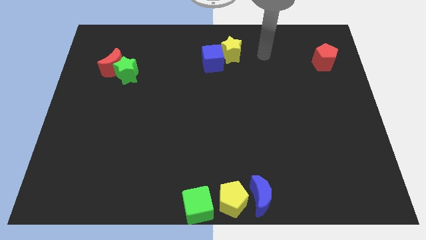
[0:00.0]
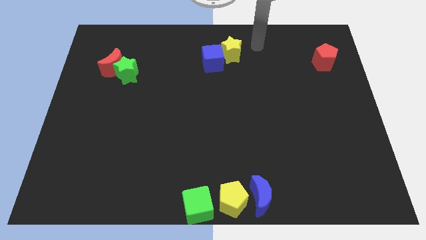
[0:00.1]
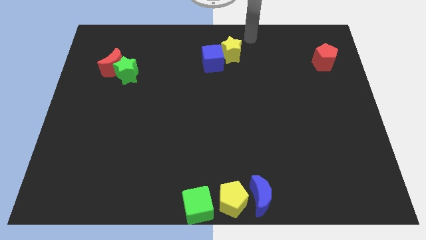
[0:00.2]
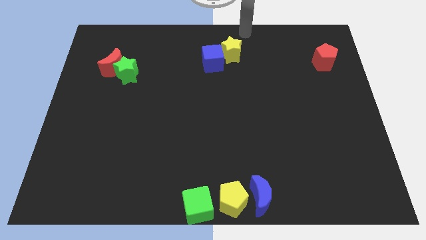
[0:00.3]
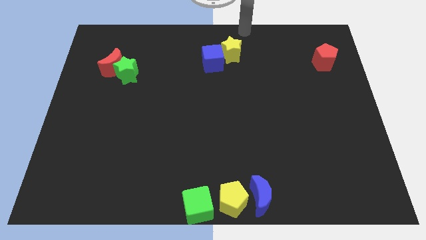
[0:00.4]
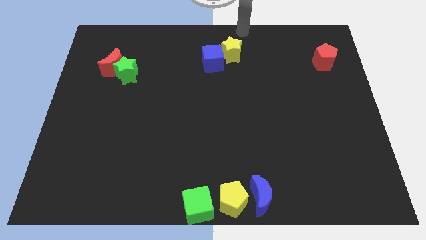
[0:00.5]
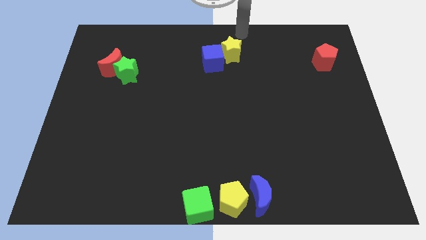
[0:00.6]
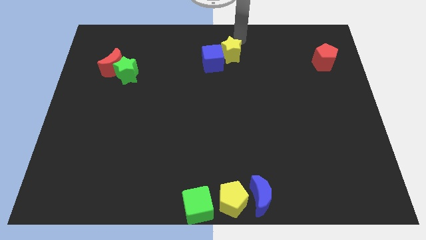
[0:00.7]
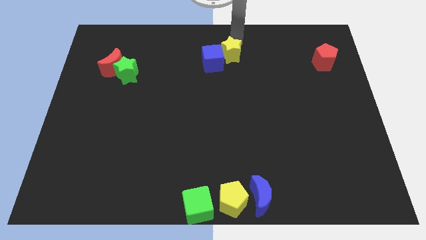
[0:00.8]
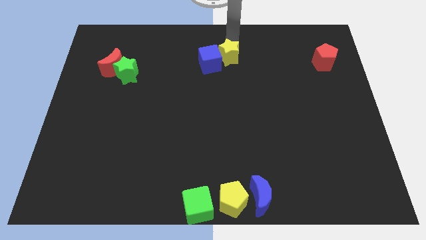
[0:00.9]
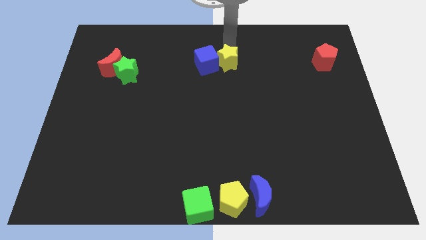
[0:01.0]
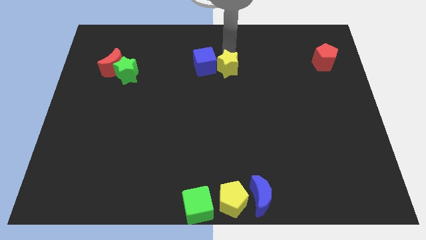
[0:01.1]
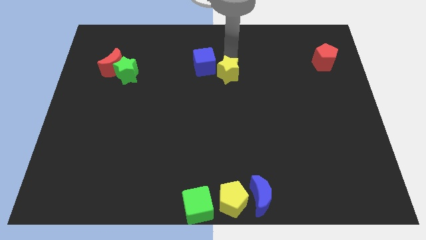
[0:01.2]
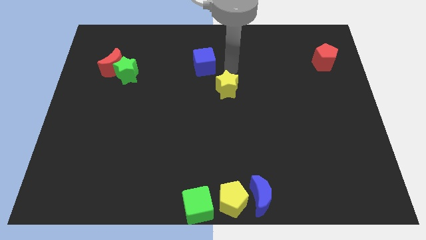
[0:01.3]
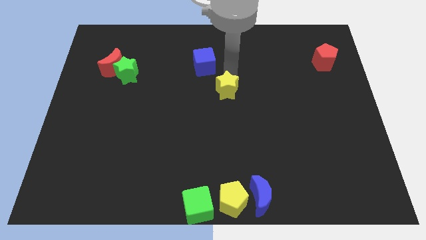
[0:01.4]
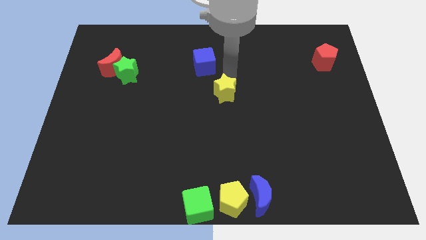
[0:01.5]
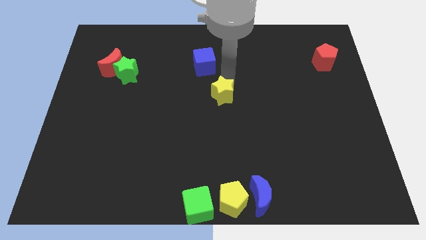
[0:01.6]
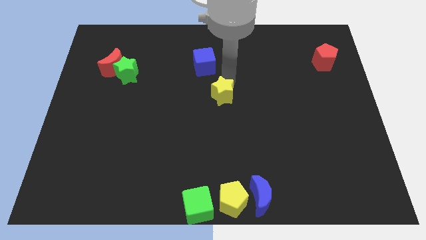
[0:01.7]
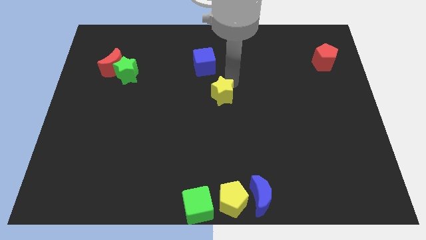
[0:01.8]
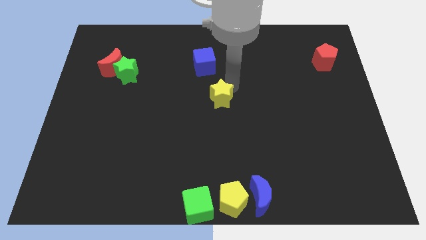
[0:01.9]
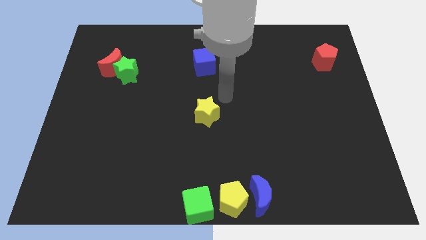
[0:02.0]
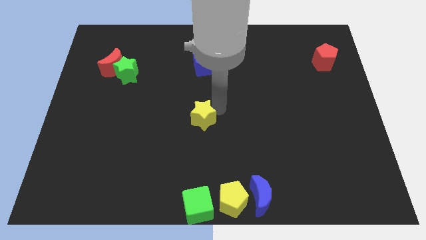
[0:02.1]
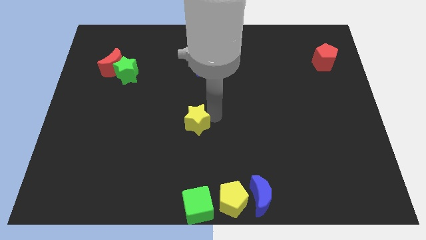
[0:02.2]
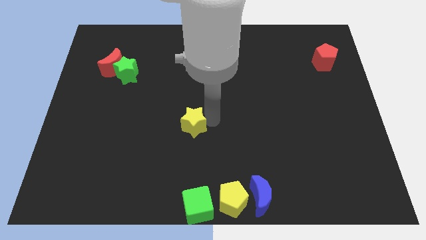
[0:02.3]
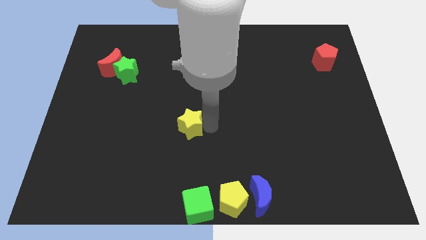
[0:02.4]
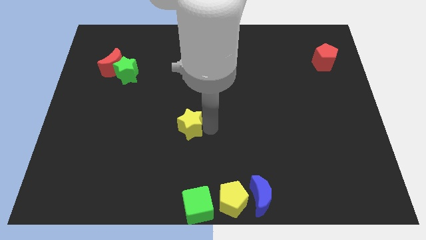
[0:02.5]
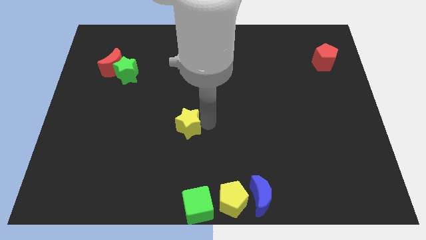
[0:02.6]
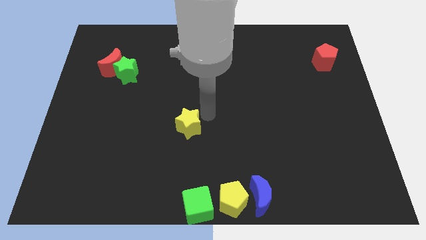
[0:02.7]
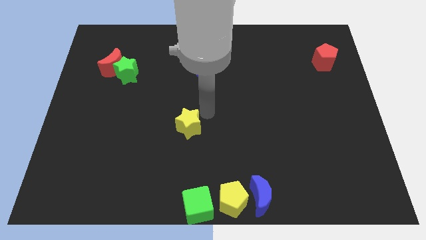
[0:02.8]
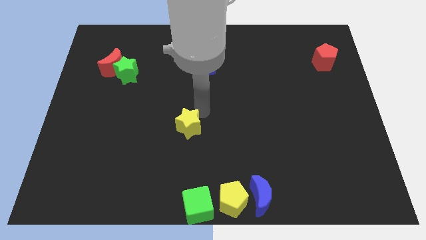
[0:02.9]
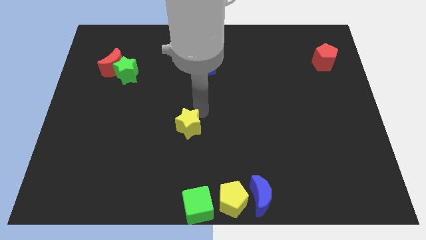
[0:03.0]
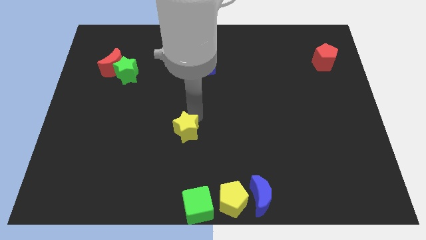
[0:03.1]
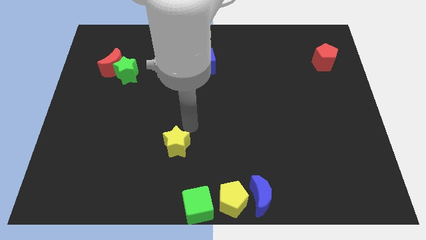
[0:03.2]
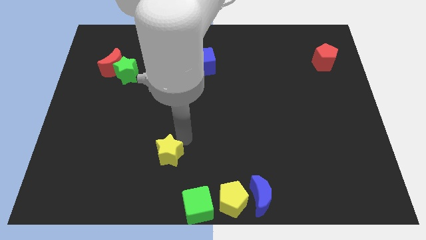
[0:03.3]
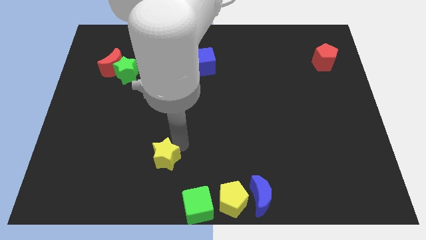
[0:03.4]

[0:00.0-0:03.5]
separate the yellow star from the blue cube

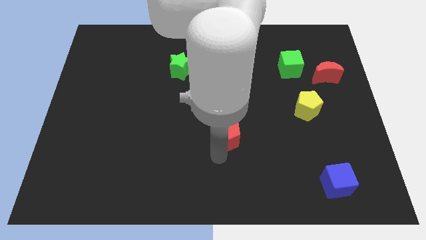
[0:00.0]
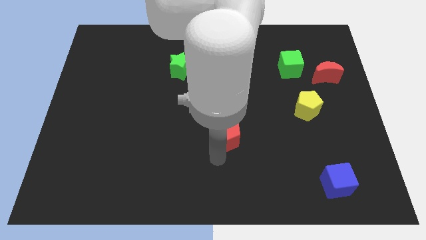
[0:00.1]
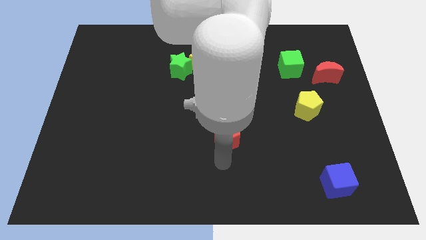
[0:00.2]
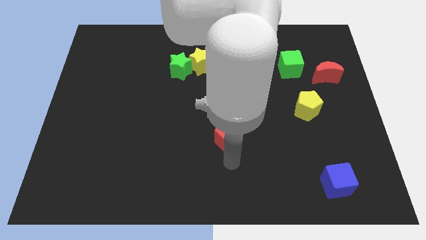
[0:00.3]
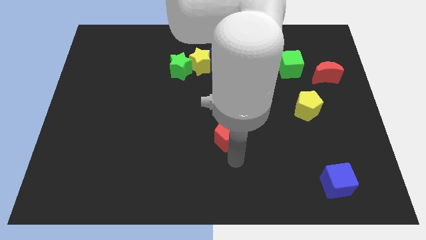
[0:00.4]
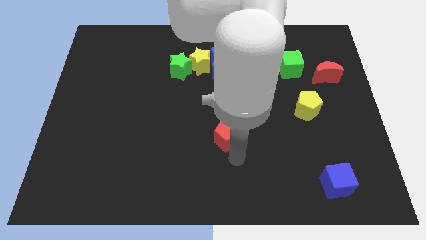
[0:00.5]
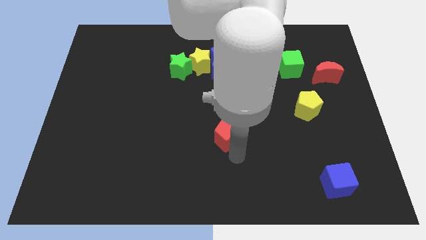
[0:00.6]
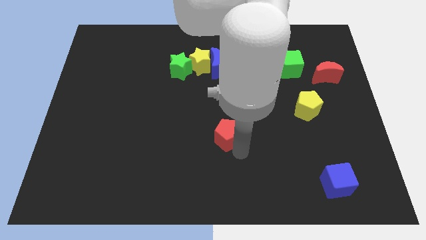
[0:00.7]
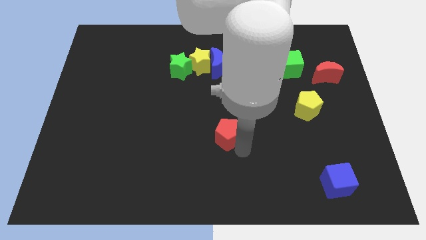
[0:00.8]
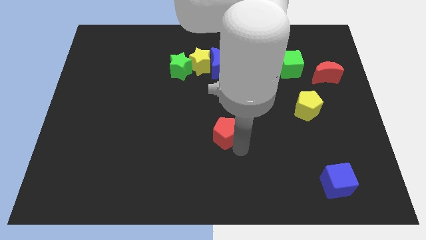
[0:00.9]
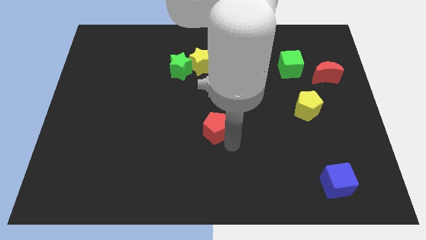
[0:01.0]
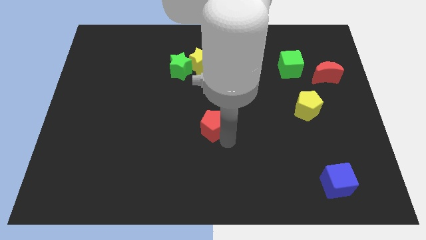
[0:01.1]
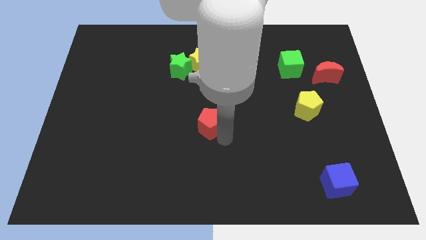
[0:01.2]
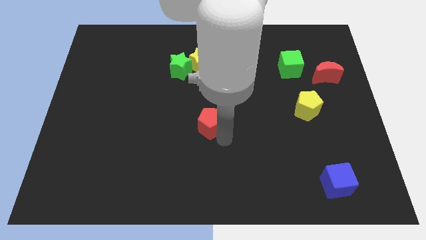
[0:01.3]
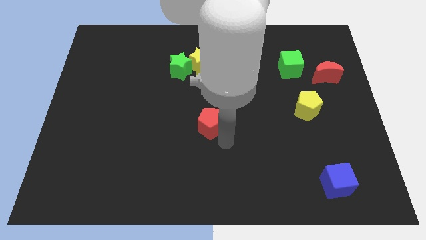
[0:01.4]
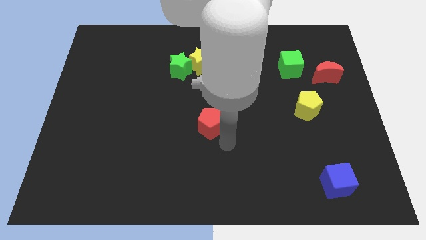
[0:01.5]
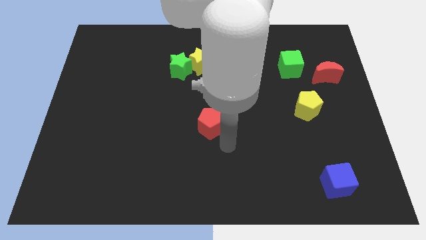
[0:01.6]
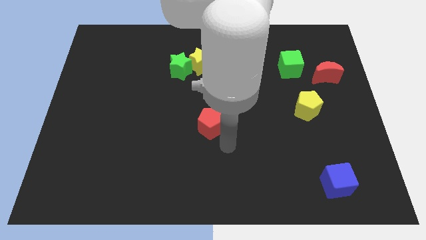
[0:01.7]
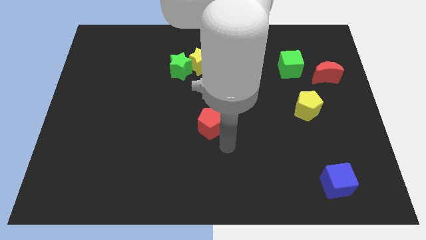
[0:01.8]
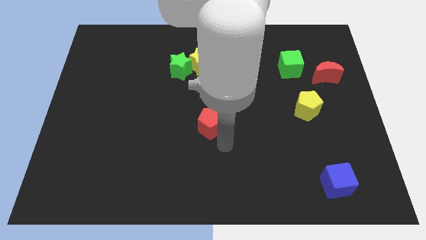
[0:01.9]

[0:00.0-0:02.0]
slide the red pentagon to the center of the board

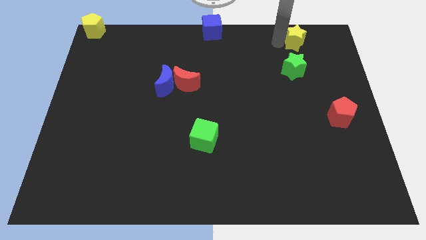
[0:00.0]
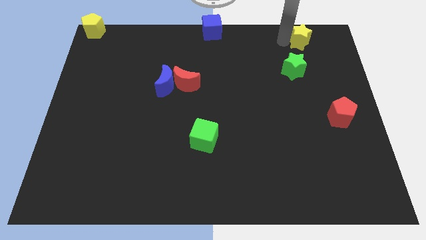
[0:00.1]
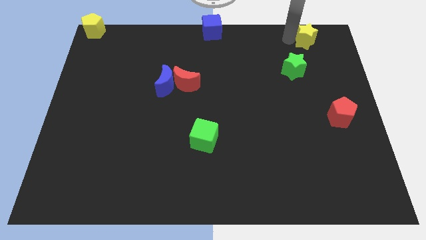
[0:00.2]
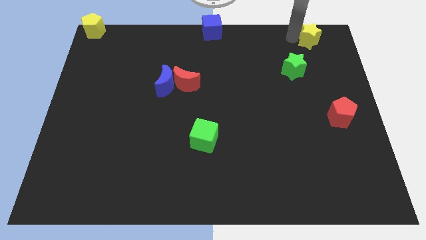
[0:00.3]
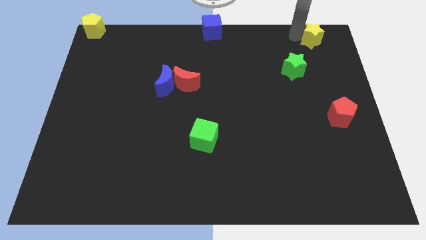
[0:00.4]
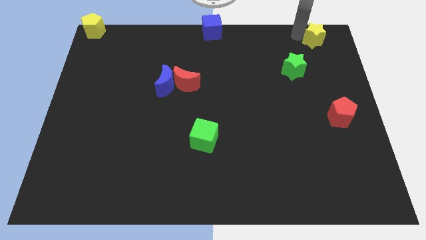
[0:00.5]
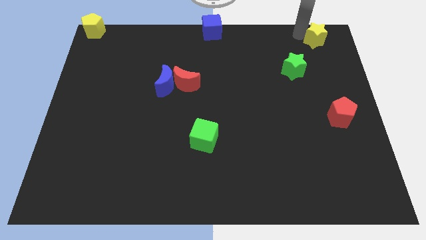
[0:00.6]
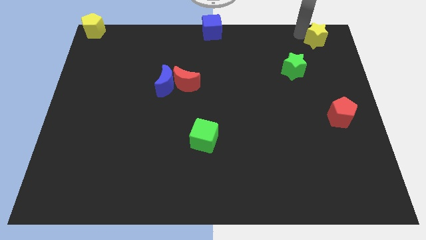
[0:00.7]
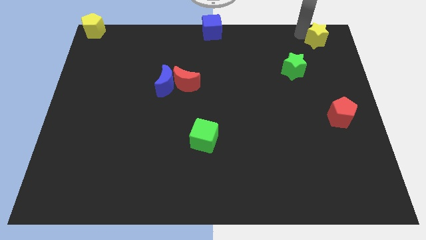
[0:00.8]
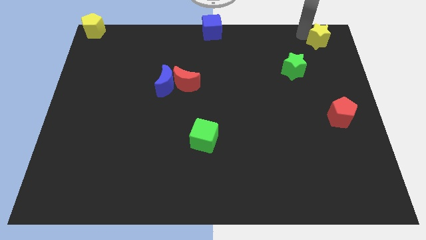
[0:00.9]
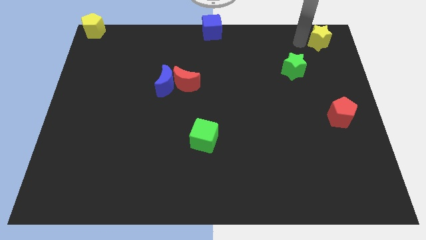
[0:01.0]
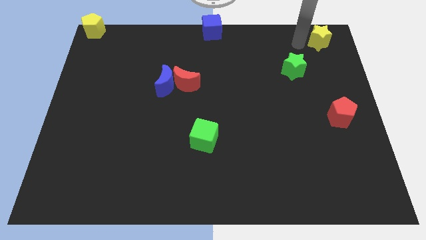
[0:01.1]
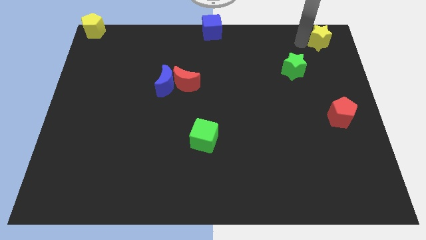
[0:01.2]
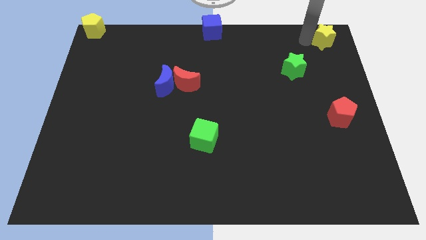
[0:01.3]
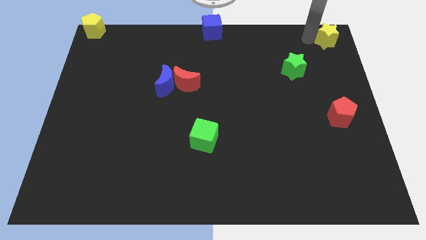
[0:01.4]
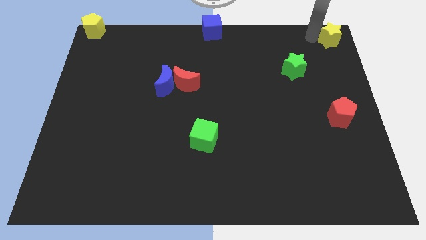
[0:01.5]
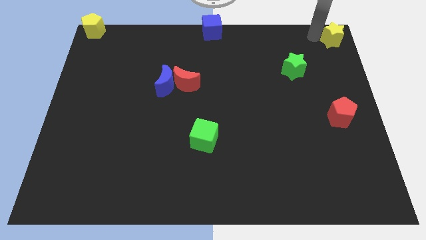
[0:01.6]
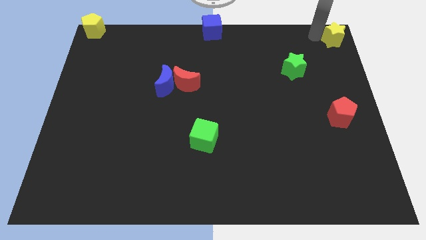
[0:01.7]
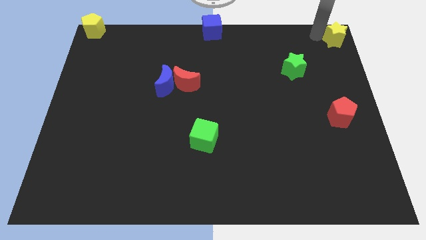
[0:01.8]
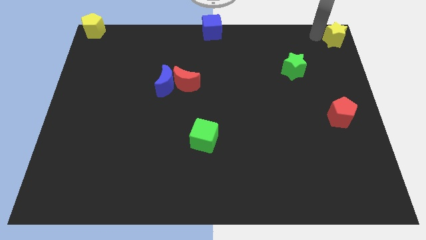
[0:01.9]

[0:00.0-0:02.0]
drag the yellow star diagonally top right to the green star

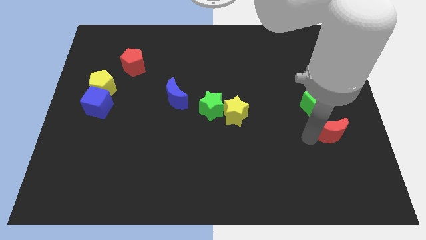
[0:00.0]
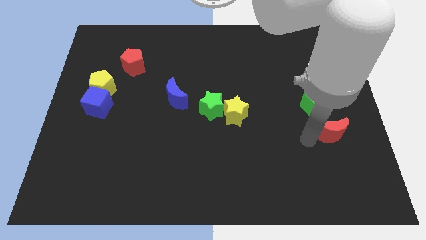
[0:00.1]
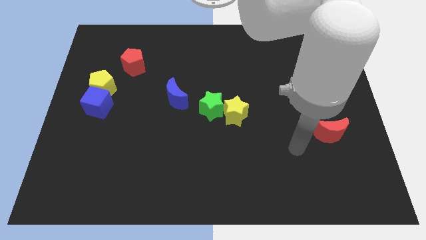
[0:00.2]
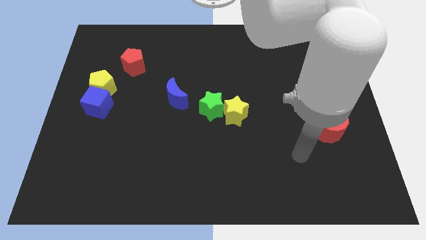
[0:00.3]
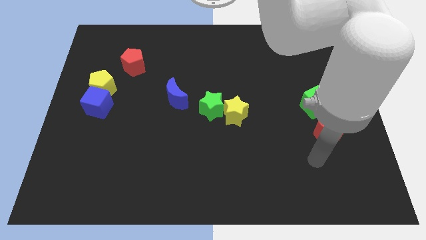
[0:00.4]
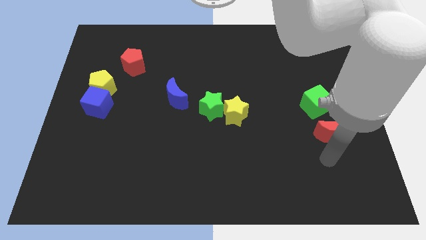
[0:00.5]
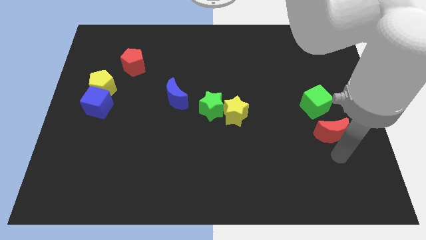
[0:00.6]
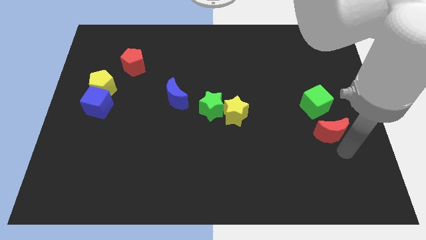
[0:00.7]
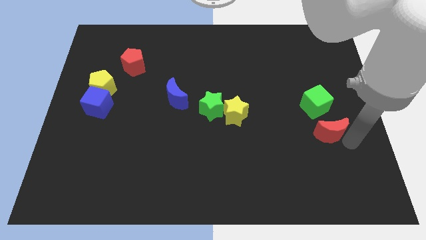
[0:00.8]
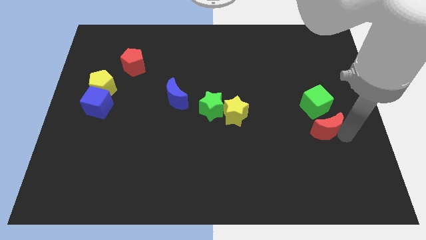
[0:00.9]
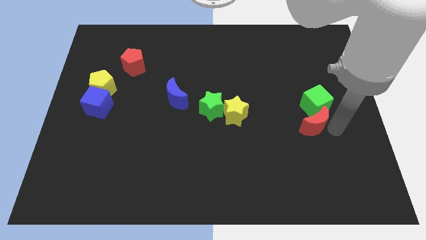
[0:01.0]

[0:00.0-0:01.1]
make the red crescent touch the green cube

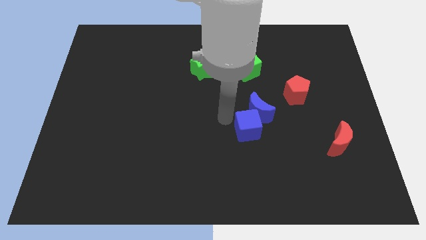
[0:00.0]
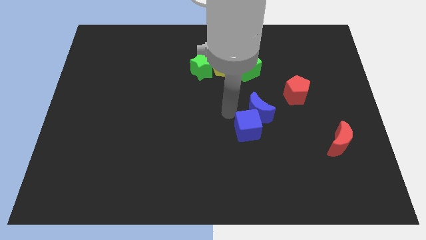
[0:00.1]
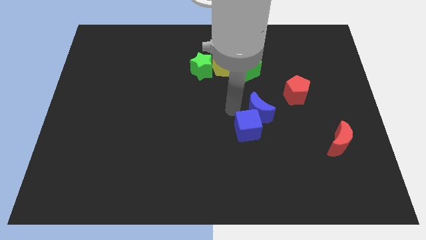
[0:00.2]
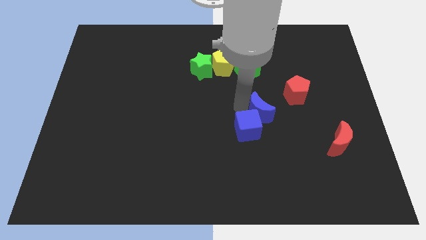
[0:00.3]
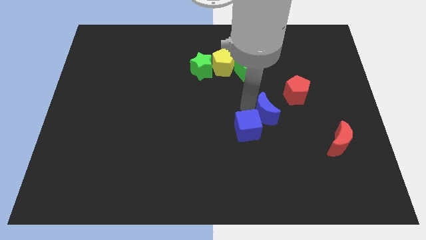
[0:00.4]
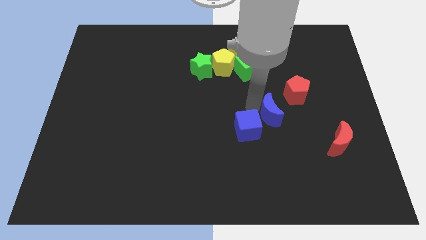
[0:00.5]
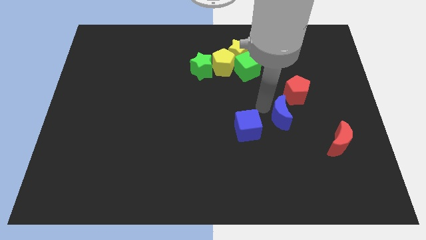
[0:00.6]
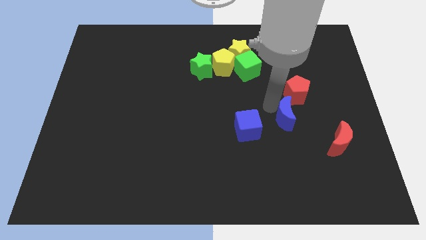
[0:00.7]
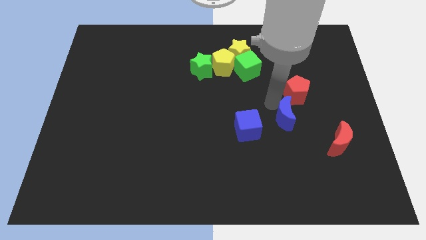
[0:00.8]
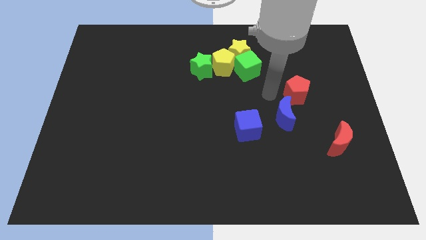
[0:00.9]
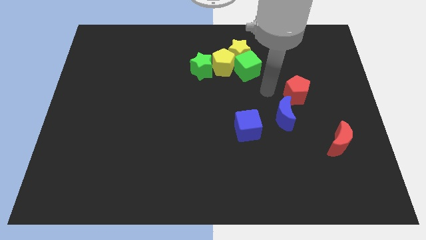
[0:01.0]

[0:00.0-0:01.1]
separate the blue moon from the blue cube
